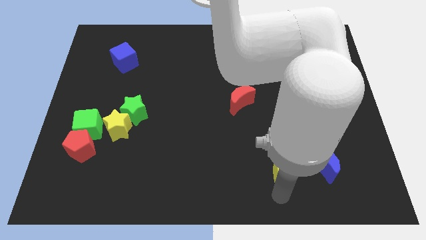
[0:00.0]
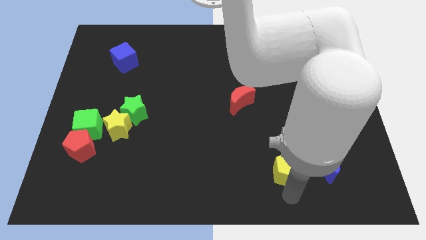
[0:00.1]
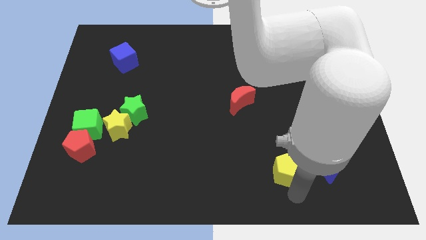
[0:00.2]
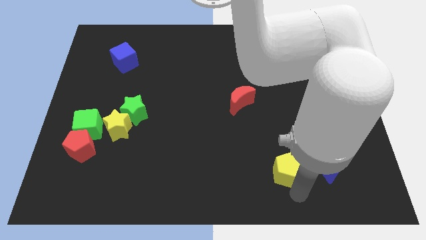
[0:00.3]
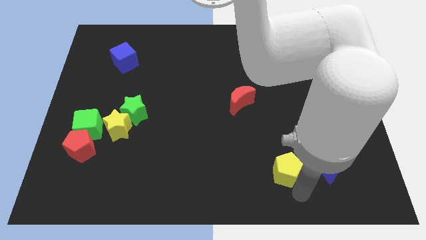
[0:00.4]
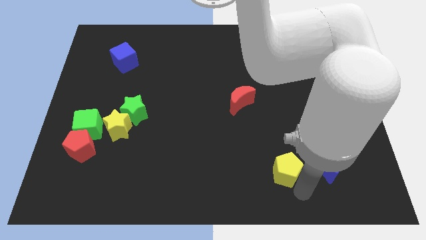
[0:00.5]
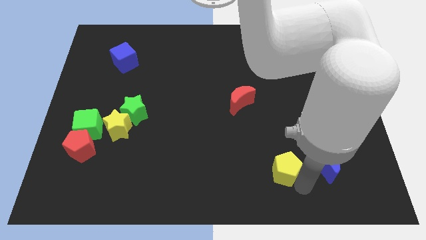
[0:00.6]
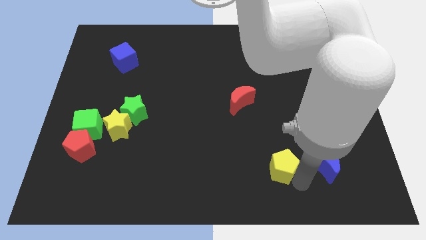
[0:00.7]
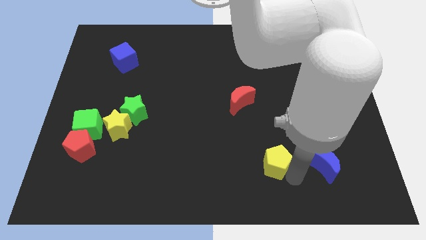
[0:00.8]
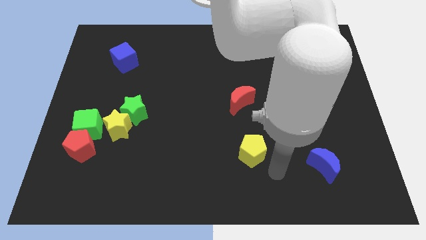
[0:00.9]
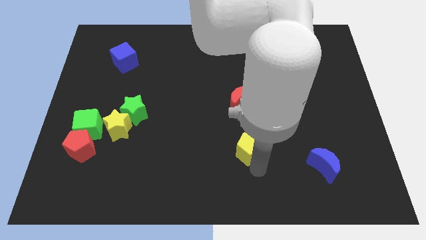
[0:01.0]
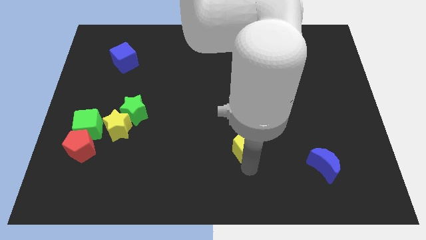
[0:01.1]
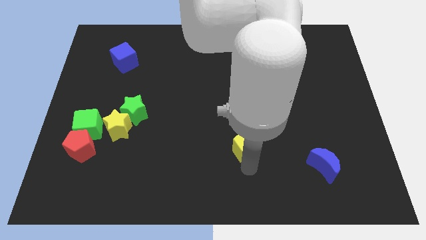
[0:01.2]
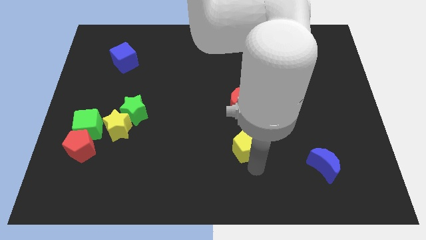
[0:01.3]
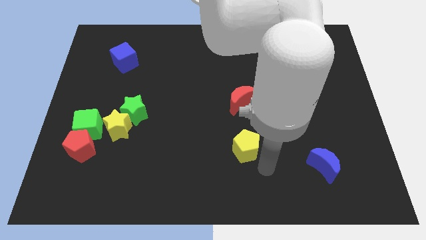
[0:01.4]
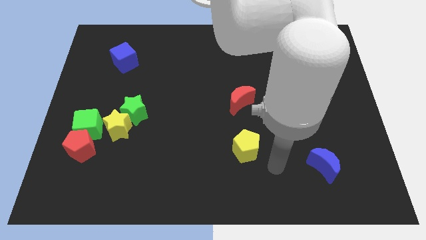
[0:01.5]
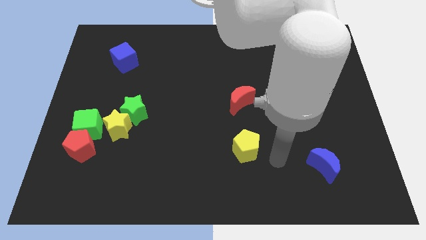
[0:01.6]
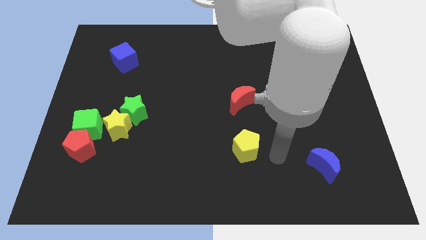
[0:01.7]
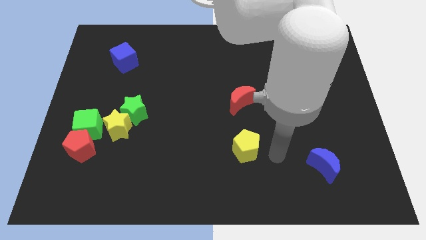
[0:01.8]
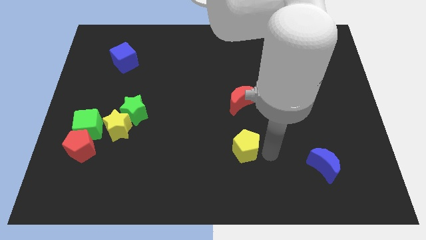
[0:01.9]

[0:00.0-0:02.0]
move the yellow pentagon towards the red crescent

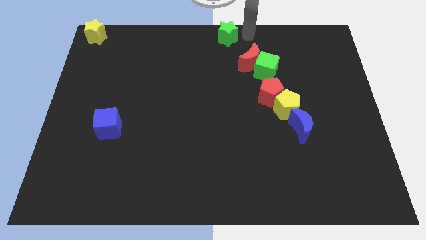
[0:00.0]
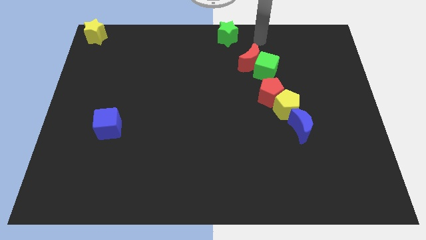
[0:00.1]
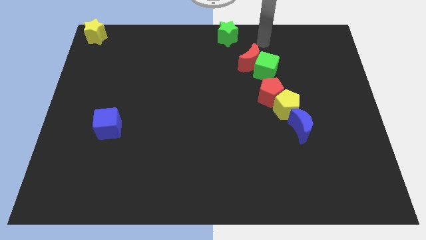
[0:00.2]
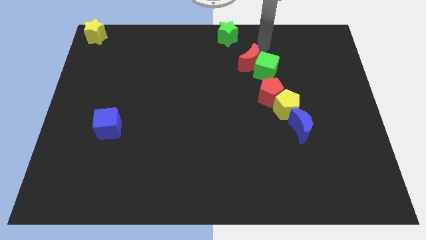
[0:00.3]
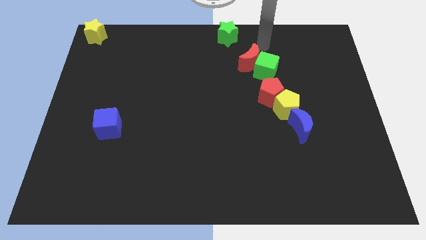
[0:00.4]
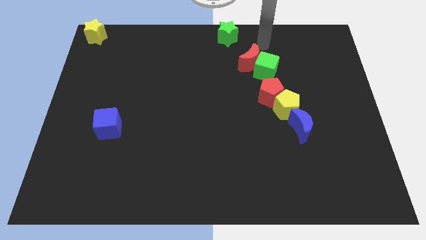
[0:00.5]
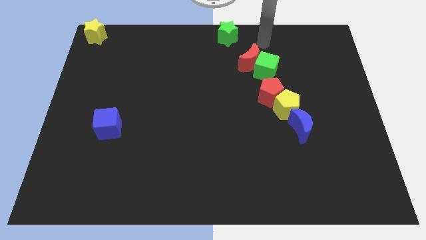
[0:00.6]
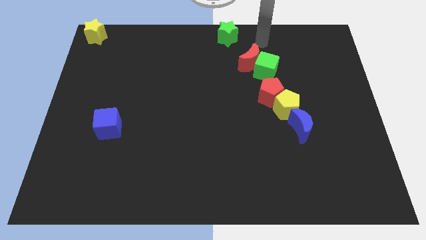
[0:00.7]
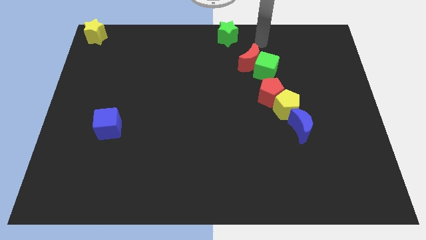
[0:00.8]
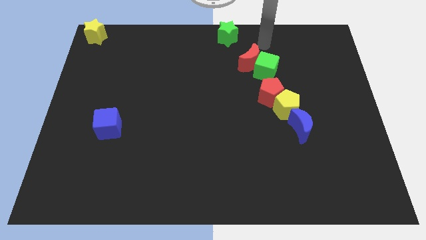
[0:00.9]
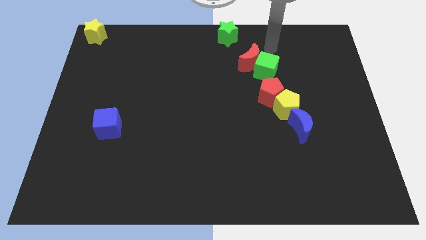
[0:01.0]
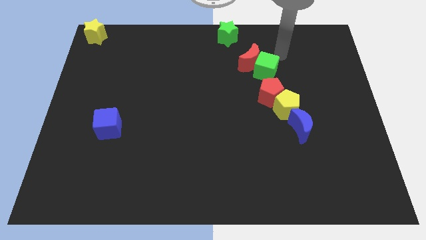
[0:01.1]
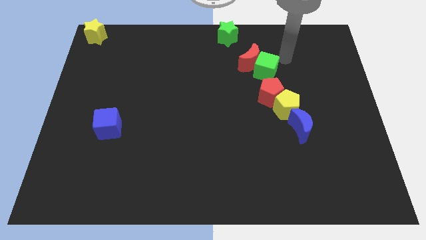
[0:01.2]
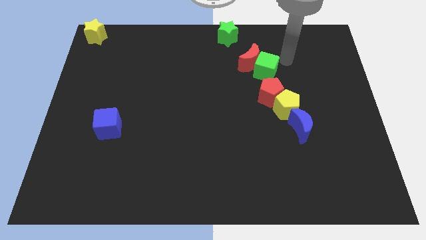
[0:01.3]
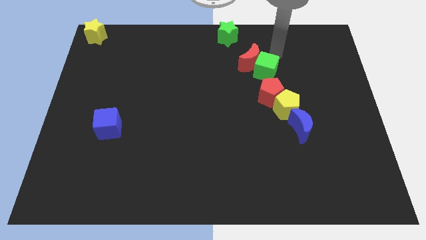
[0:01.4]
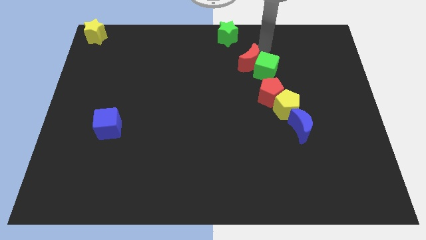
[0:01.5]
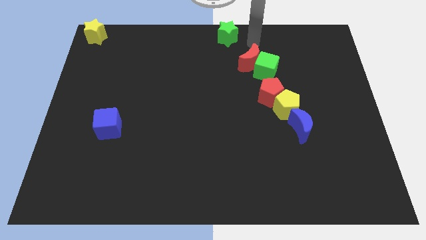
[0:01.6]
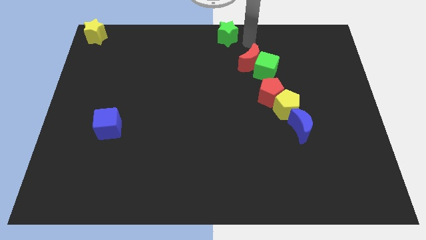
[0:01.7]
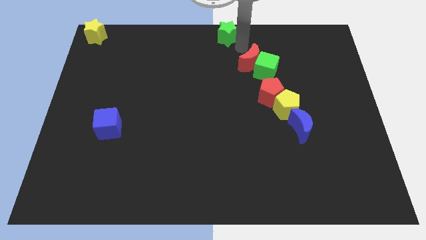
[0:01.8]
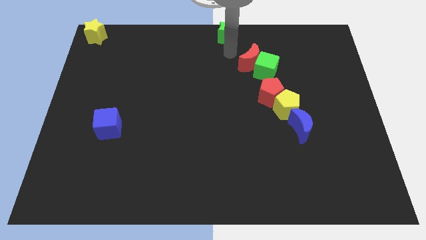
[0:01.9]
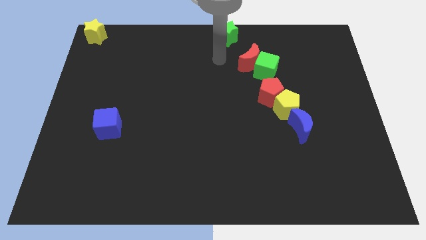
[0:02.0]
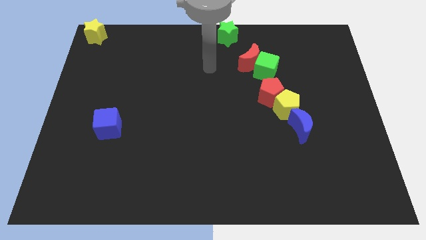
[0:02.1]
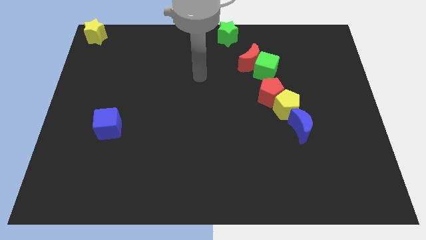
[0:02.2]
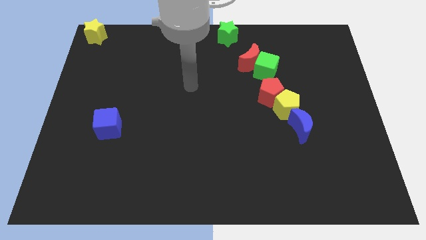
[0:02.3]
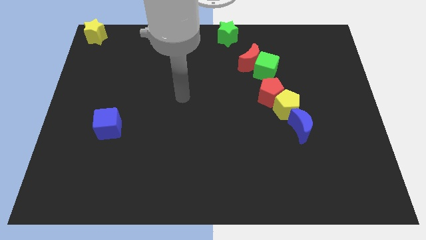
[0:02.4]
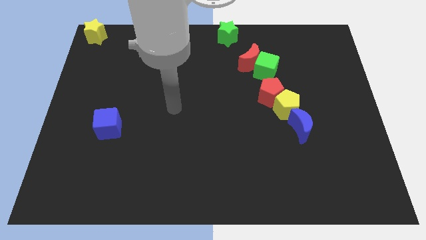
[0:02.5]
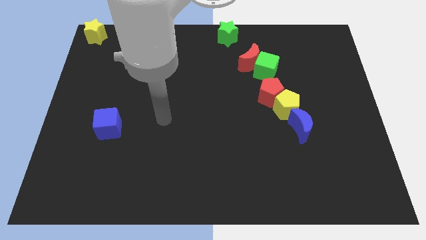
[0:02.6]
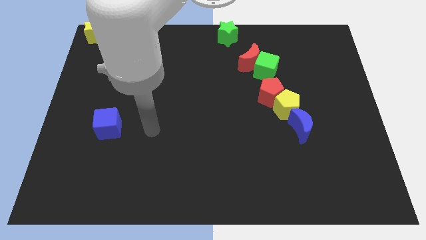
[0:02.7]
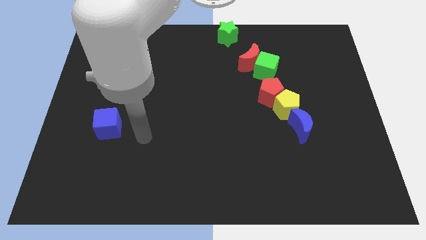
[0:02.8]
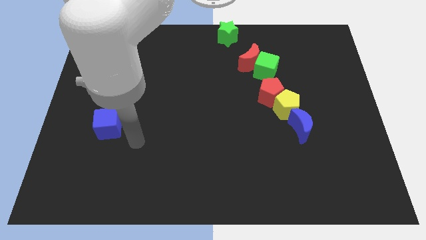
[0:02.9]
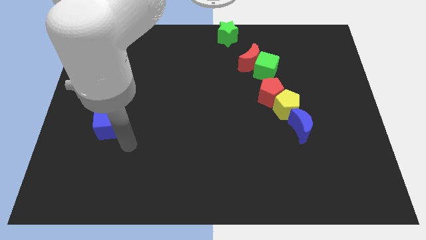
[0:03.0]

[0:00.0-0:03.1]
move the arm away from the green star

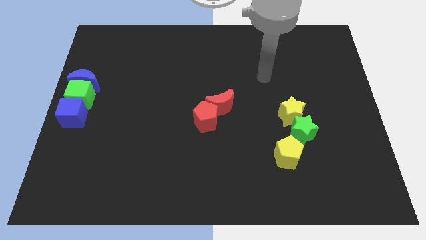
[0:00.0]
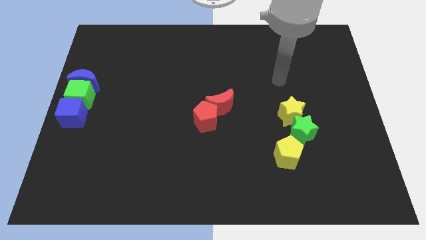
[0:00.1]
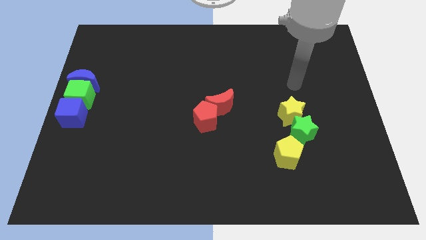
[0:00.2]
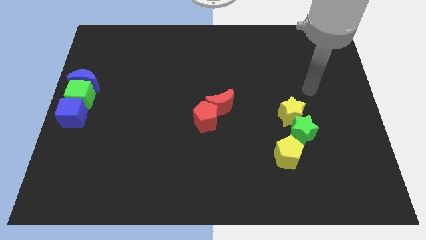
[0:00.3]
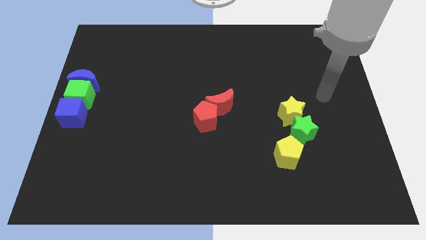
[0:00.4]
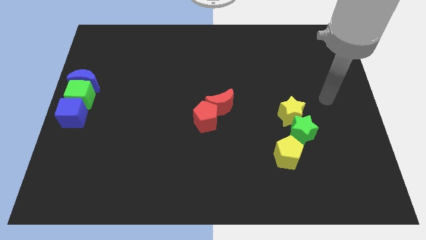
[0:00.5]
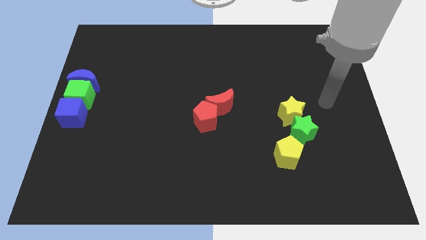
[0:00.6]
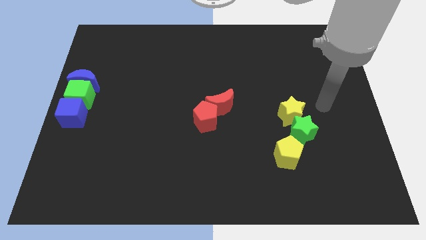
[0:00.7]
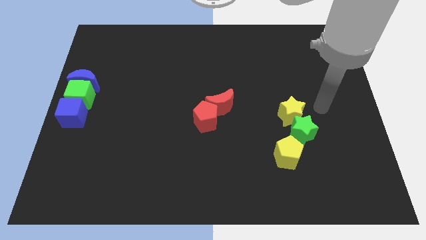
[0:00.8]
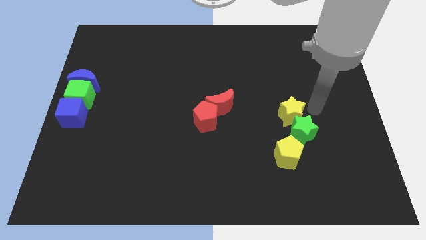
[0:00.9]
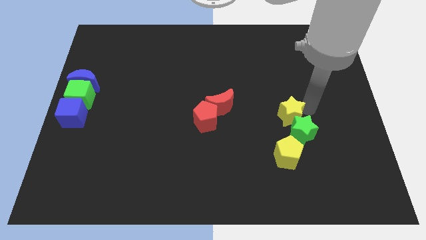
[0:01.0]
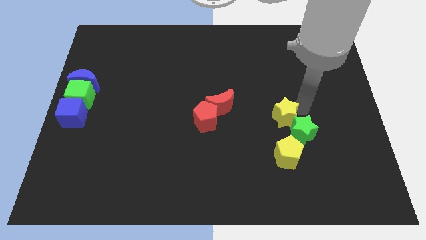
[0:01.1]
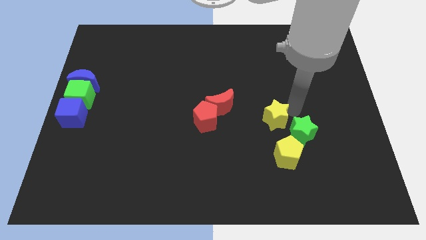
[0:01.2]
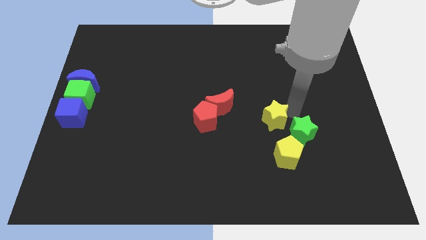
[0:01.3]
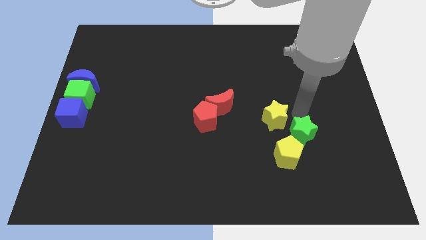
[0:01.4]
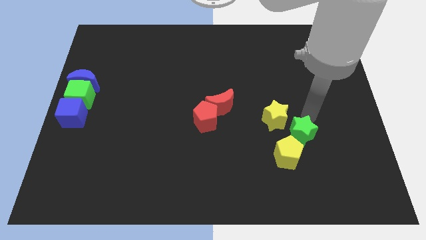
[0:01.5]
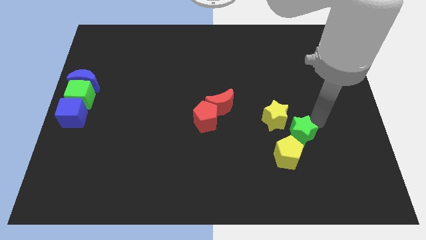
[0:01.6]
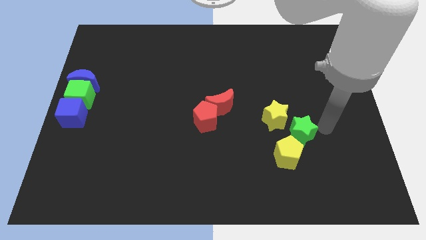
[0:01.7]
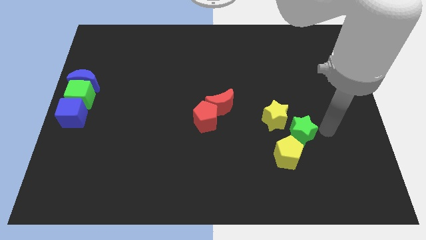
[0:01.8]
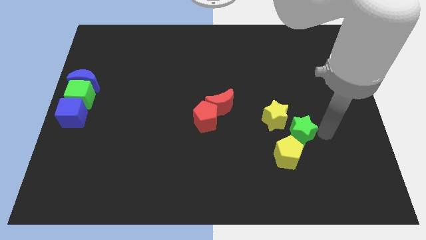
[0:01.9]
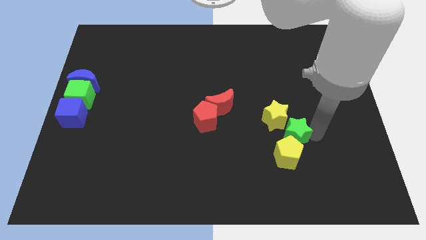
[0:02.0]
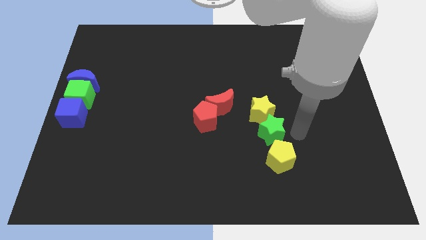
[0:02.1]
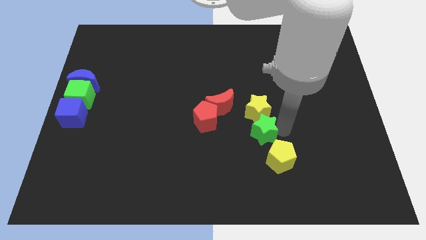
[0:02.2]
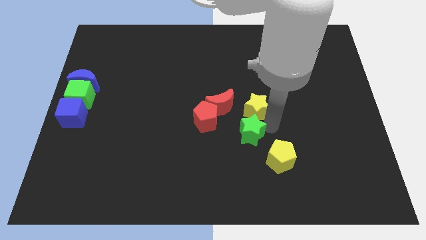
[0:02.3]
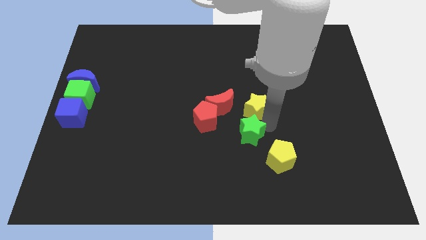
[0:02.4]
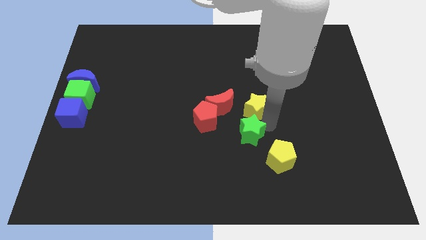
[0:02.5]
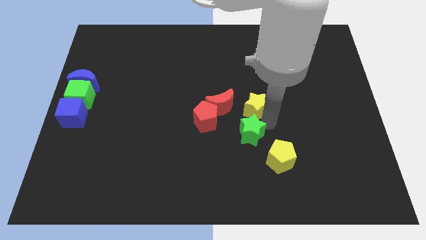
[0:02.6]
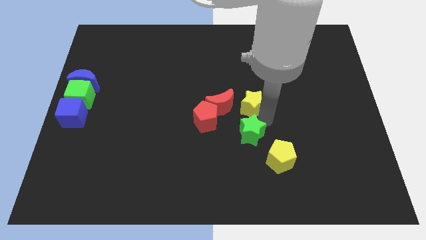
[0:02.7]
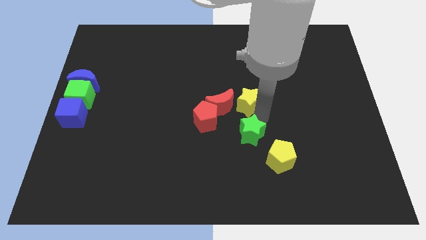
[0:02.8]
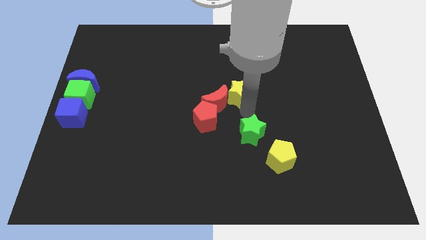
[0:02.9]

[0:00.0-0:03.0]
move yellow star along with green star towards center

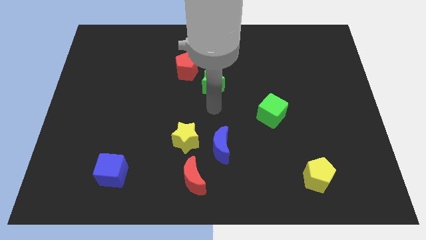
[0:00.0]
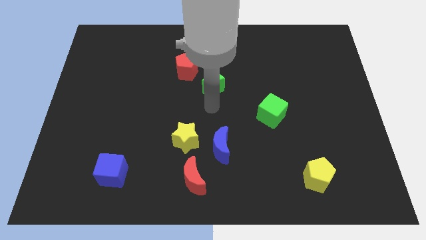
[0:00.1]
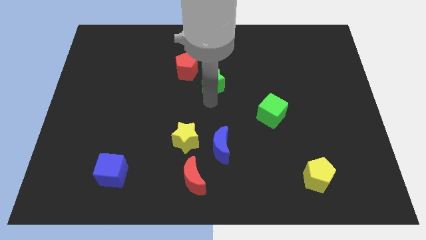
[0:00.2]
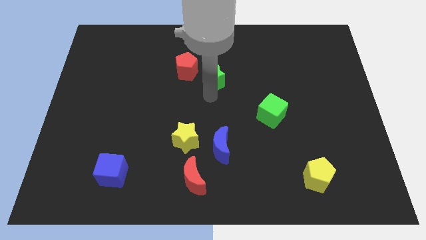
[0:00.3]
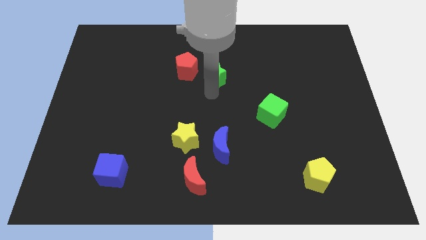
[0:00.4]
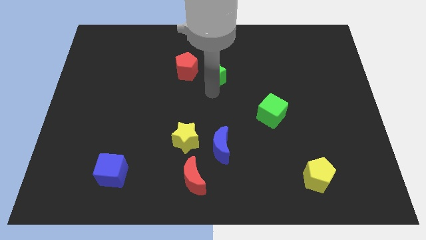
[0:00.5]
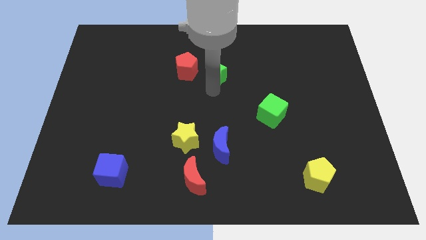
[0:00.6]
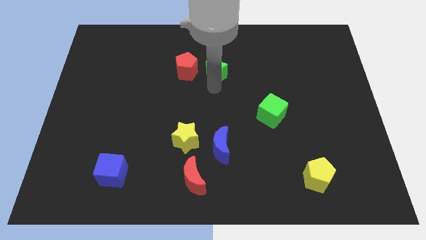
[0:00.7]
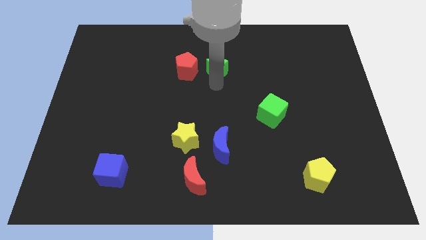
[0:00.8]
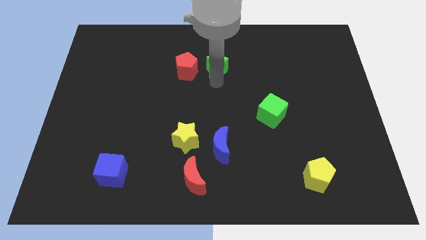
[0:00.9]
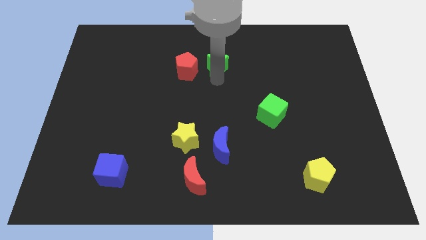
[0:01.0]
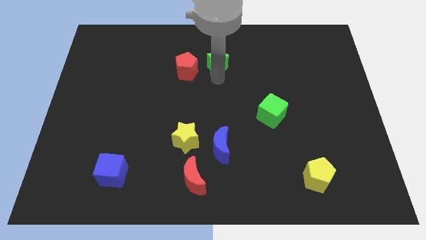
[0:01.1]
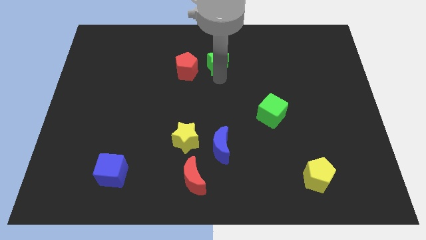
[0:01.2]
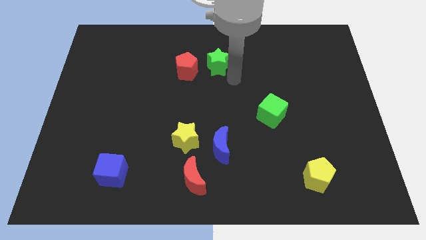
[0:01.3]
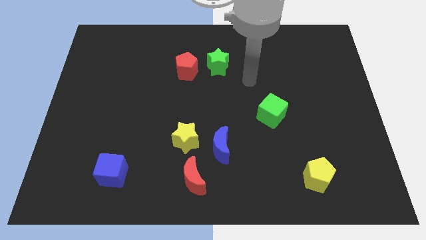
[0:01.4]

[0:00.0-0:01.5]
place the green star to the right of the red pentagon
